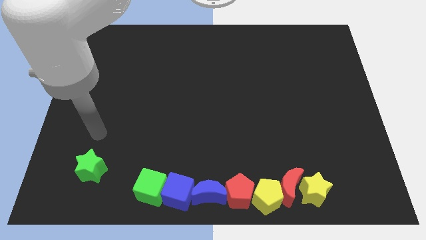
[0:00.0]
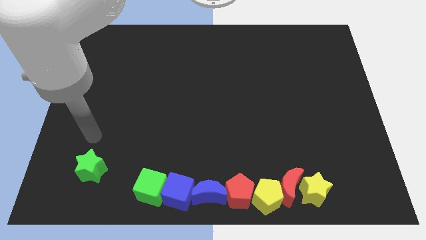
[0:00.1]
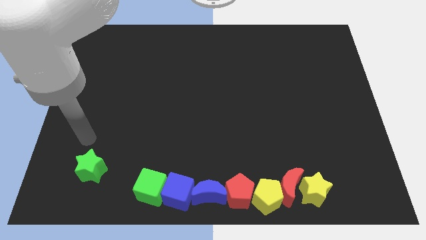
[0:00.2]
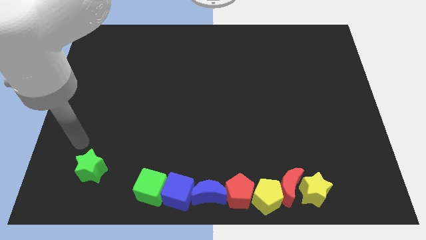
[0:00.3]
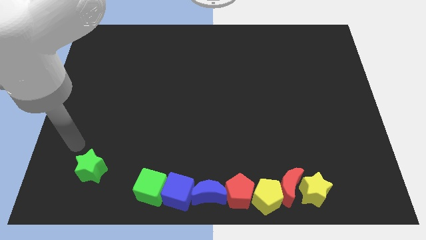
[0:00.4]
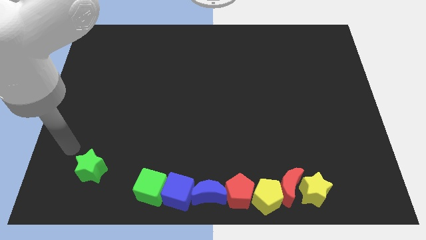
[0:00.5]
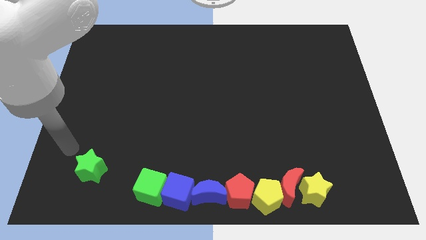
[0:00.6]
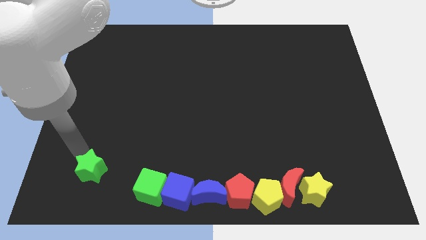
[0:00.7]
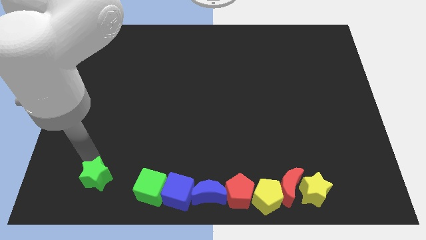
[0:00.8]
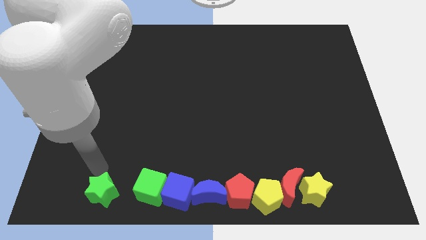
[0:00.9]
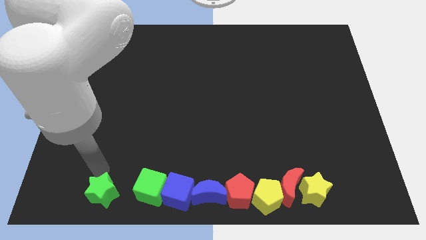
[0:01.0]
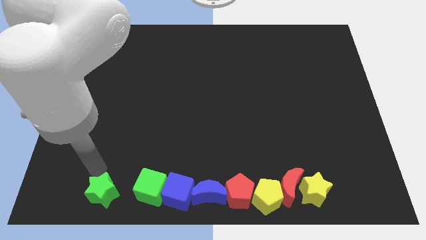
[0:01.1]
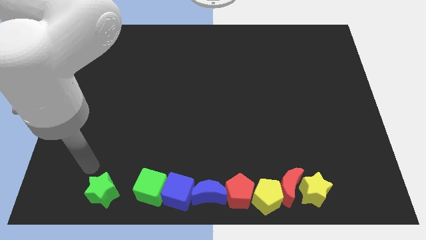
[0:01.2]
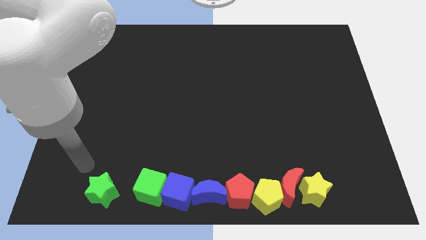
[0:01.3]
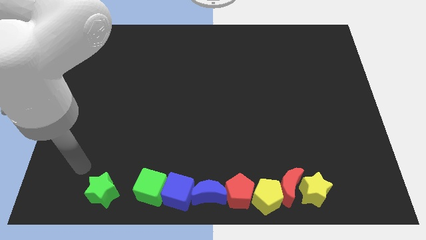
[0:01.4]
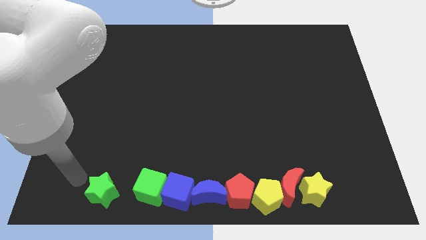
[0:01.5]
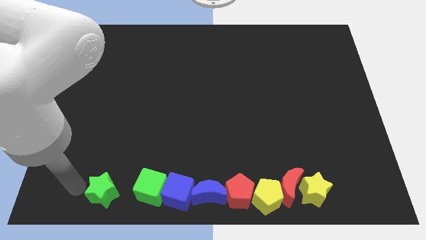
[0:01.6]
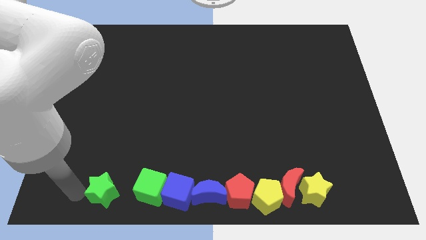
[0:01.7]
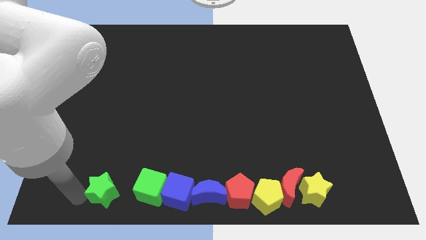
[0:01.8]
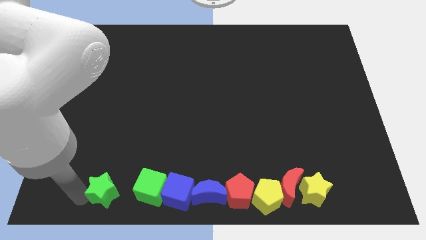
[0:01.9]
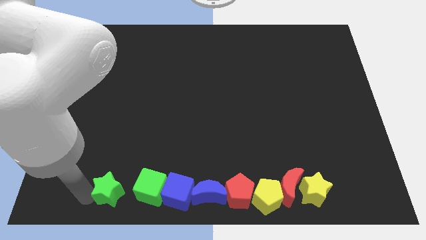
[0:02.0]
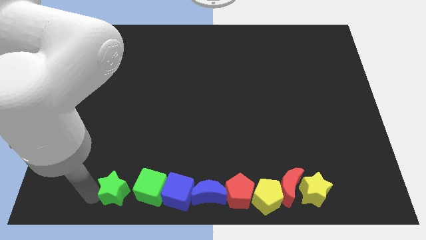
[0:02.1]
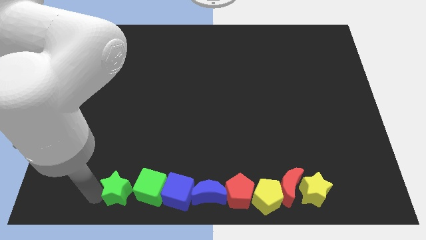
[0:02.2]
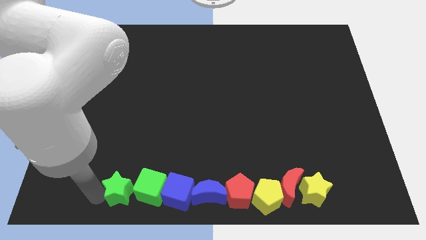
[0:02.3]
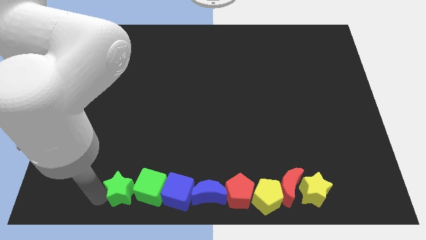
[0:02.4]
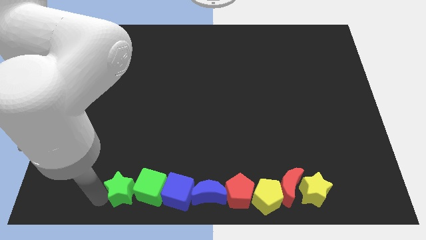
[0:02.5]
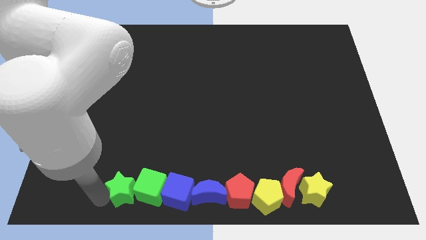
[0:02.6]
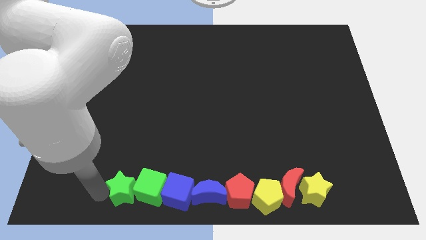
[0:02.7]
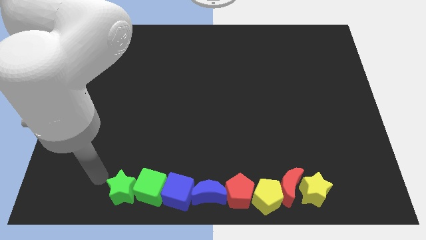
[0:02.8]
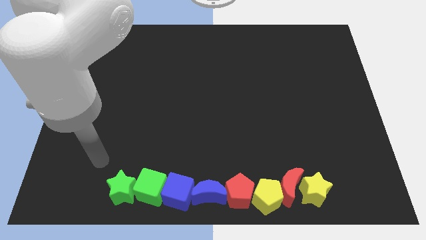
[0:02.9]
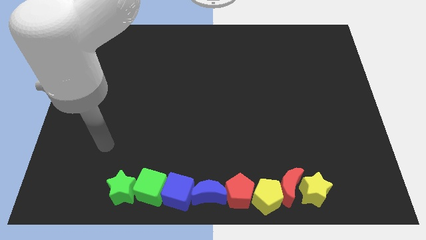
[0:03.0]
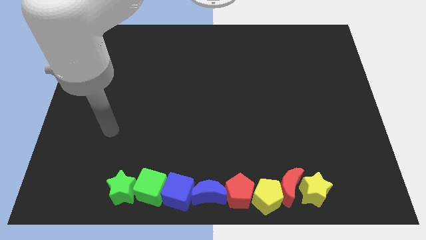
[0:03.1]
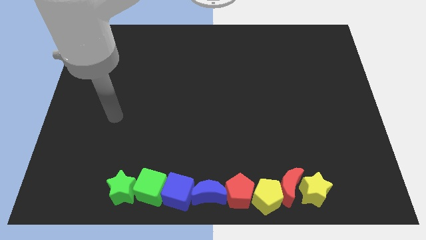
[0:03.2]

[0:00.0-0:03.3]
push the green star at the left side of the green cube green cube

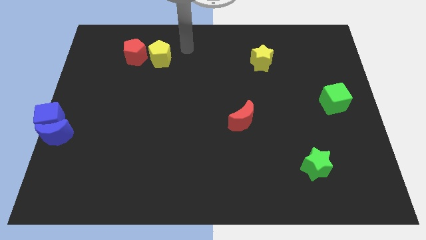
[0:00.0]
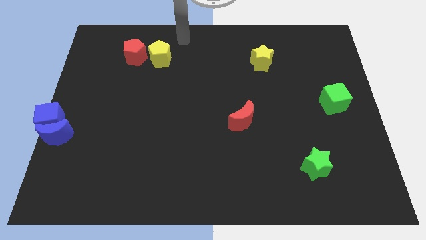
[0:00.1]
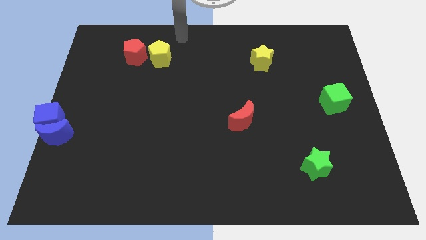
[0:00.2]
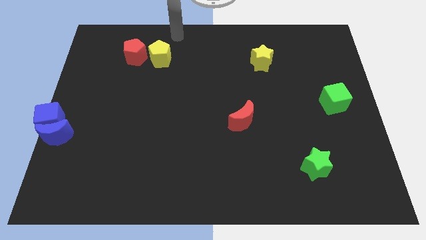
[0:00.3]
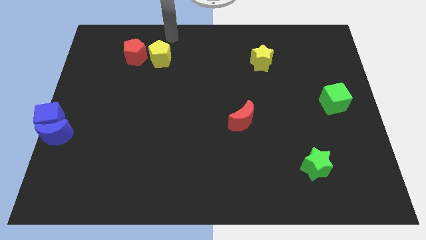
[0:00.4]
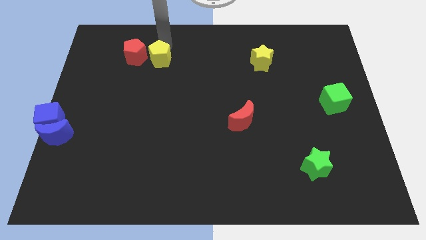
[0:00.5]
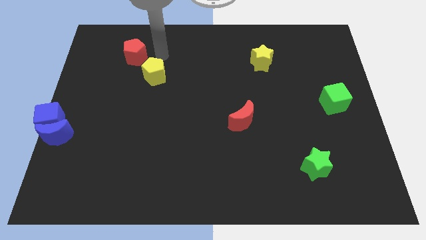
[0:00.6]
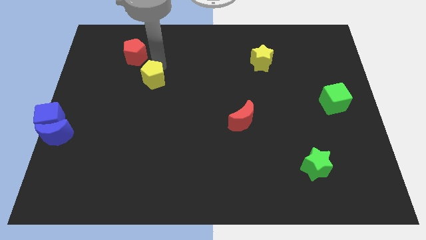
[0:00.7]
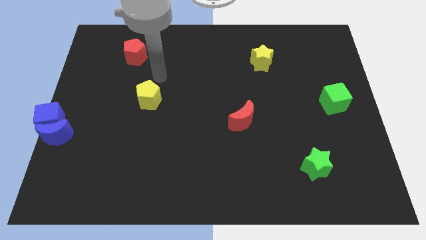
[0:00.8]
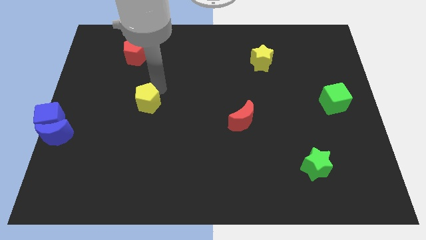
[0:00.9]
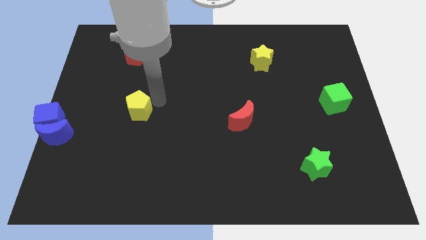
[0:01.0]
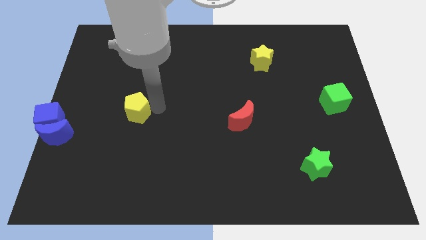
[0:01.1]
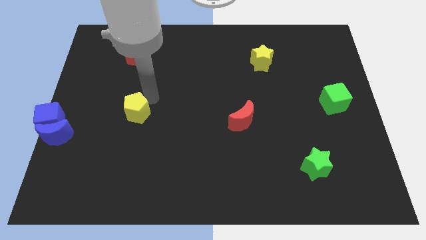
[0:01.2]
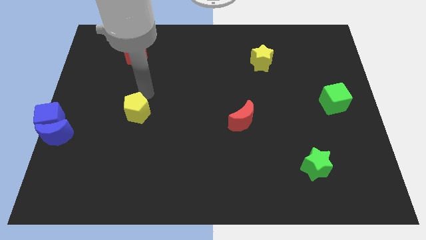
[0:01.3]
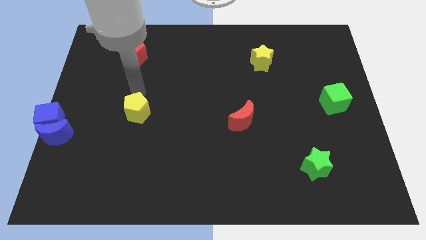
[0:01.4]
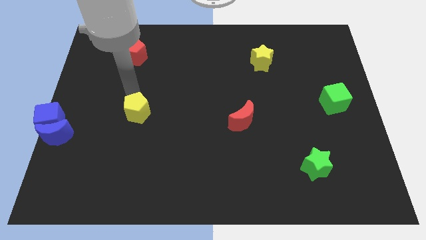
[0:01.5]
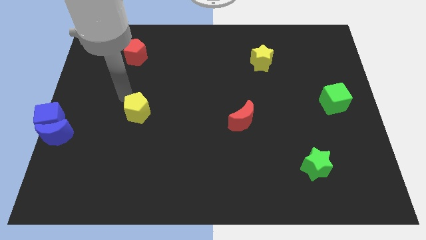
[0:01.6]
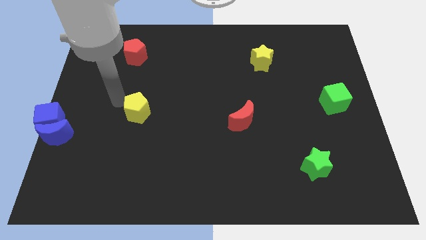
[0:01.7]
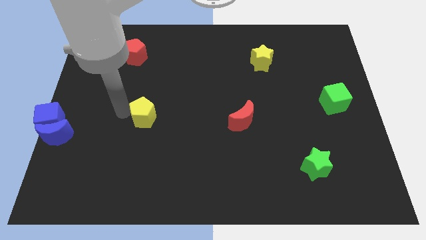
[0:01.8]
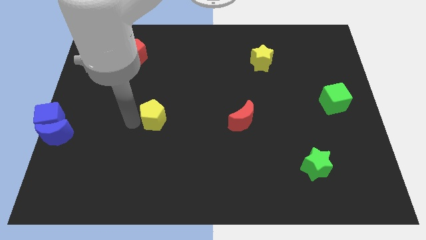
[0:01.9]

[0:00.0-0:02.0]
move the yellow pentagon to the left of the red moon

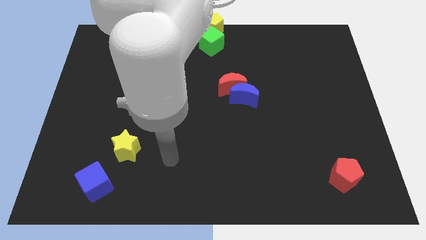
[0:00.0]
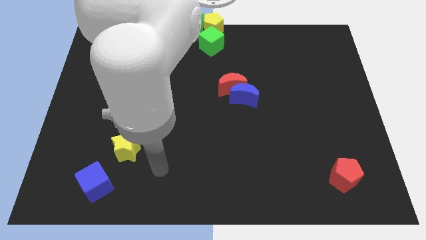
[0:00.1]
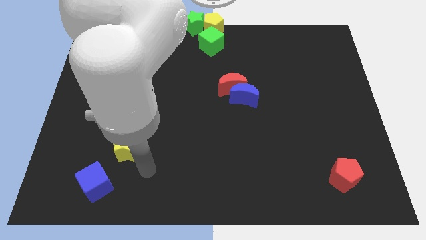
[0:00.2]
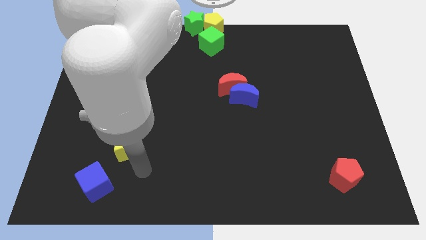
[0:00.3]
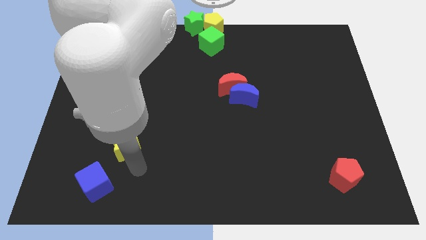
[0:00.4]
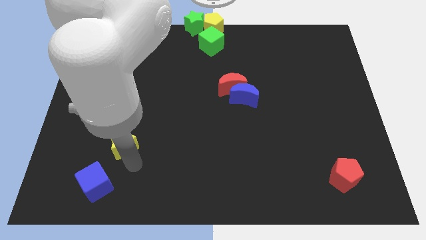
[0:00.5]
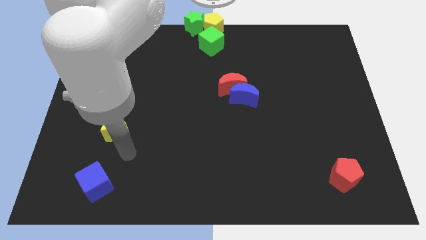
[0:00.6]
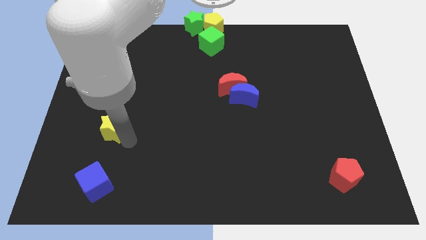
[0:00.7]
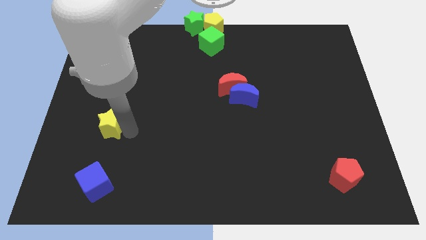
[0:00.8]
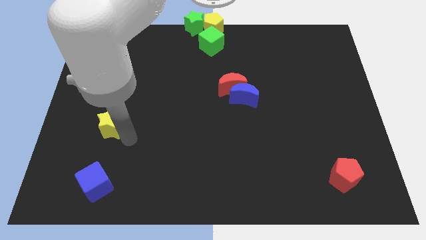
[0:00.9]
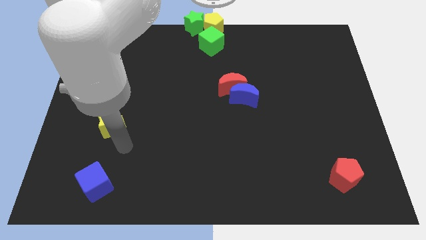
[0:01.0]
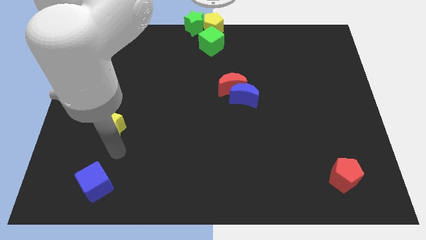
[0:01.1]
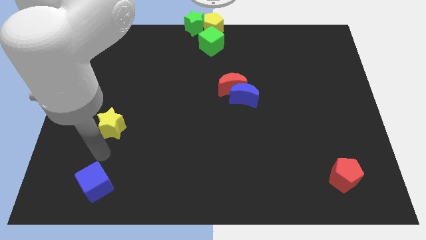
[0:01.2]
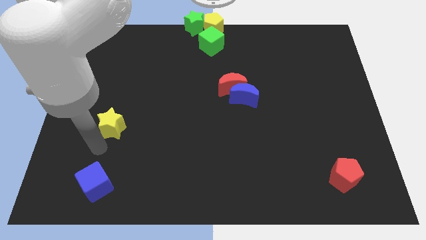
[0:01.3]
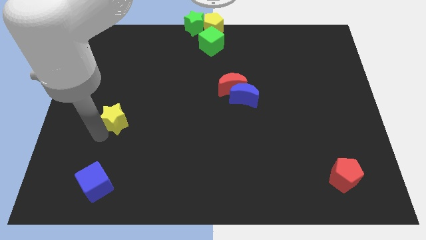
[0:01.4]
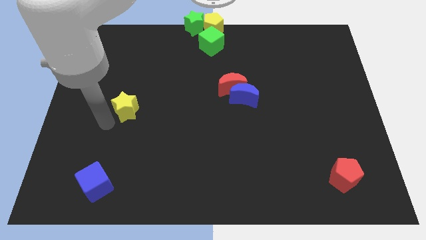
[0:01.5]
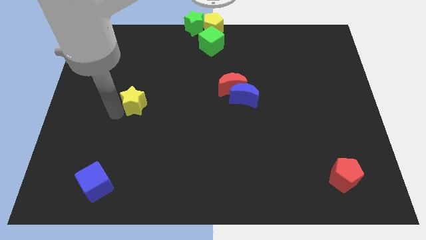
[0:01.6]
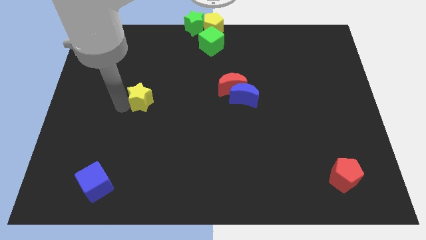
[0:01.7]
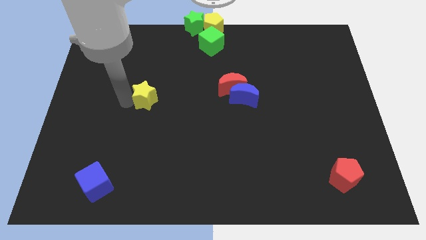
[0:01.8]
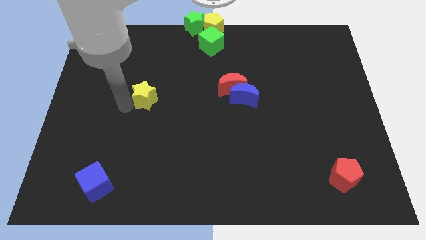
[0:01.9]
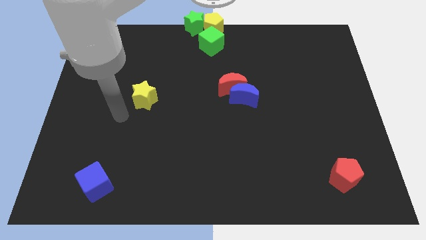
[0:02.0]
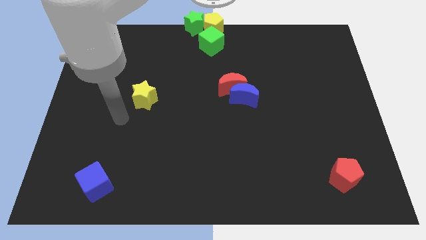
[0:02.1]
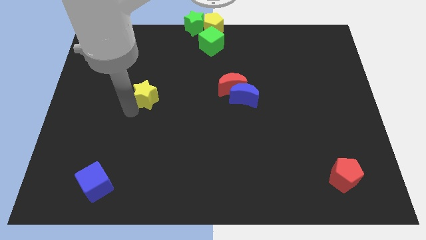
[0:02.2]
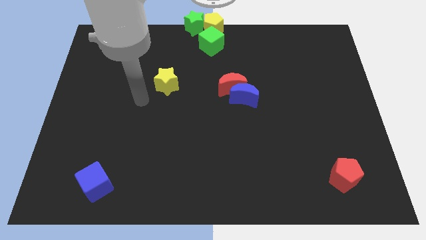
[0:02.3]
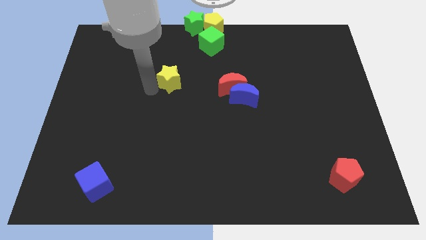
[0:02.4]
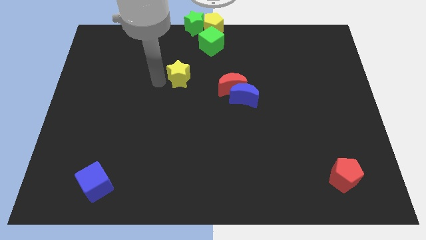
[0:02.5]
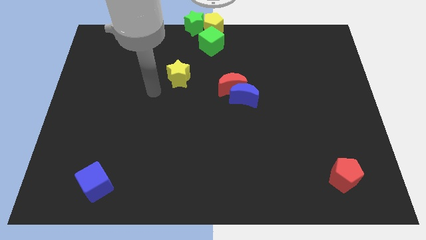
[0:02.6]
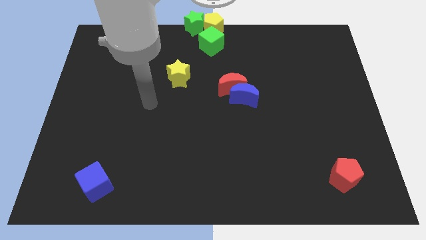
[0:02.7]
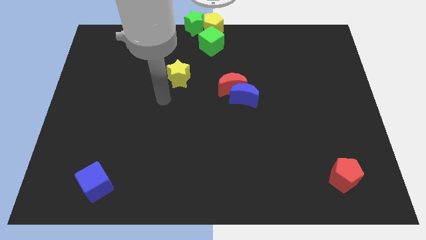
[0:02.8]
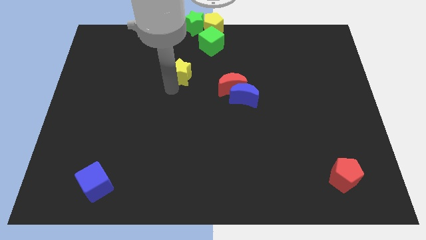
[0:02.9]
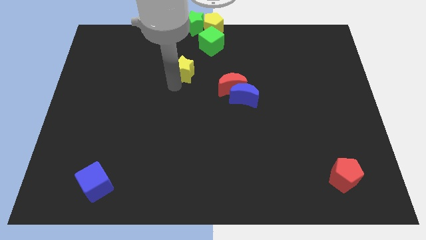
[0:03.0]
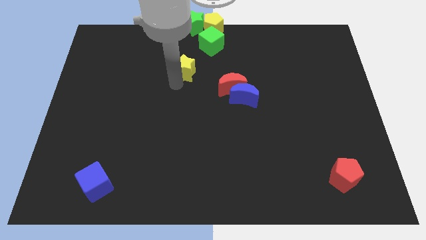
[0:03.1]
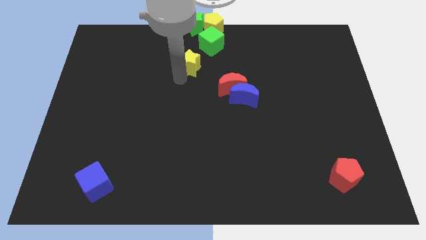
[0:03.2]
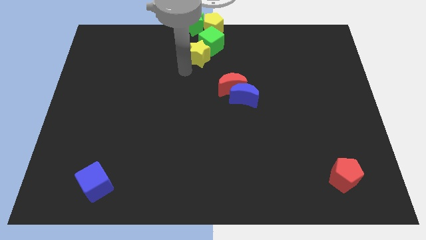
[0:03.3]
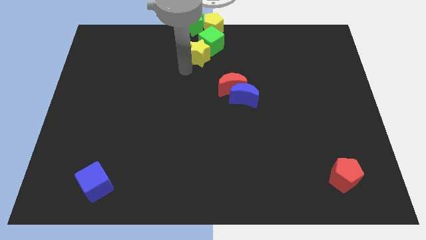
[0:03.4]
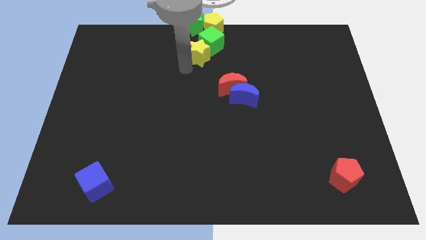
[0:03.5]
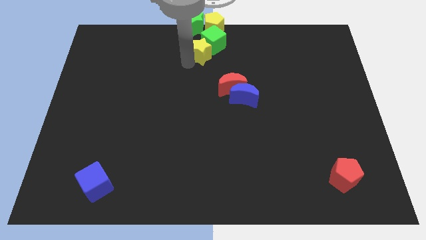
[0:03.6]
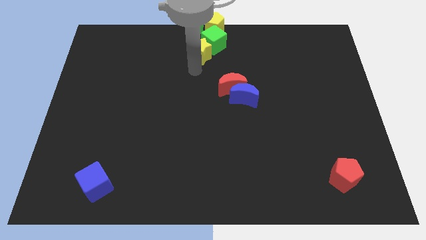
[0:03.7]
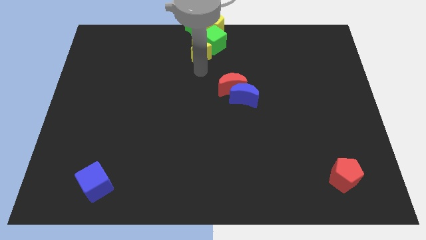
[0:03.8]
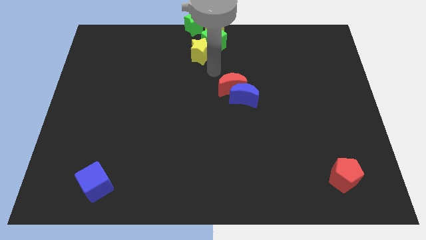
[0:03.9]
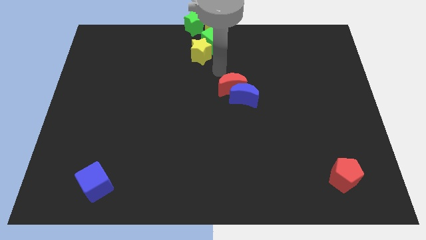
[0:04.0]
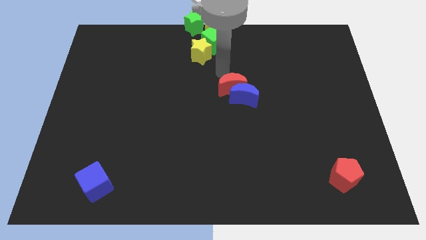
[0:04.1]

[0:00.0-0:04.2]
place the yellow star beside the green cube
